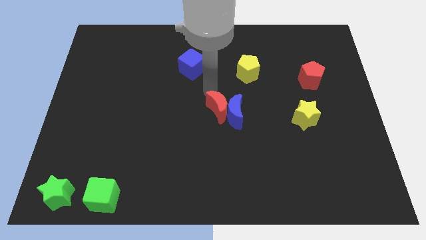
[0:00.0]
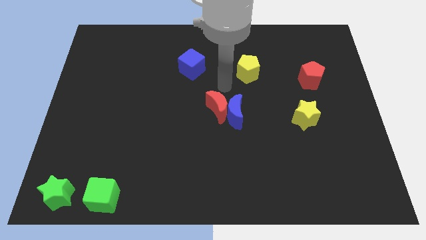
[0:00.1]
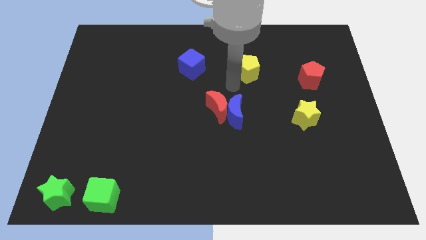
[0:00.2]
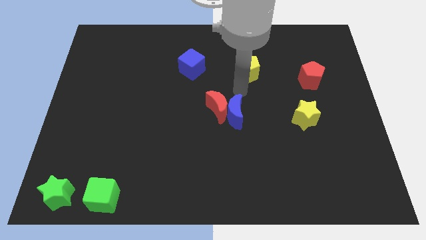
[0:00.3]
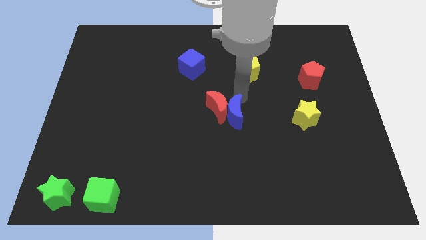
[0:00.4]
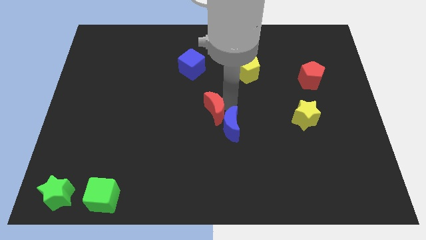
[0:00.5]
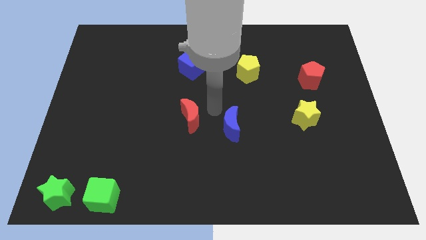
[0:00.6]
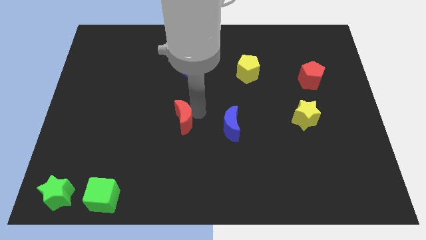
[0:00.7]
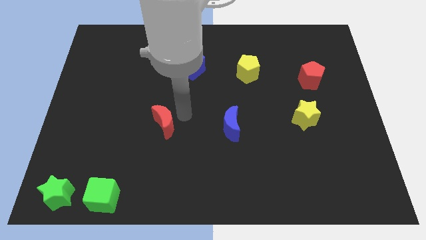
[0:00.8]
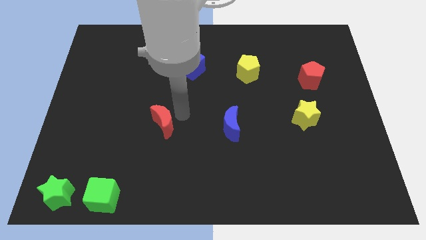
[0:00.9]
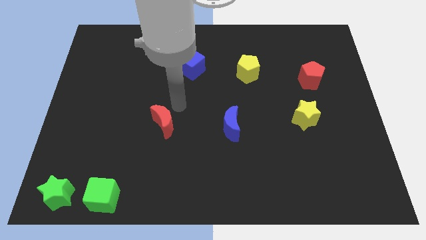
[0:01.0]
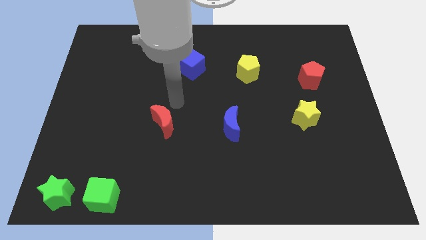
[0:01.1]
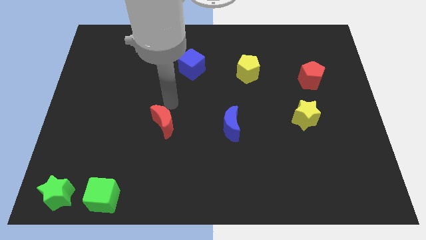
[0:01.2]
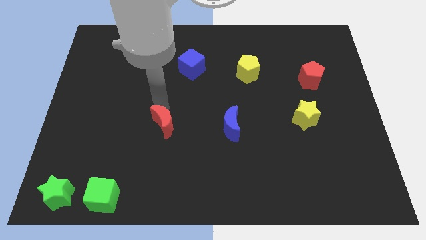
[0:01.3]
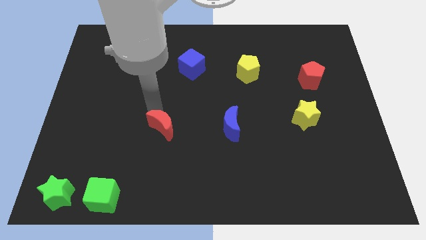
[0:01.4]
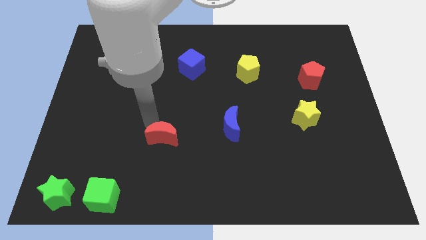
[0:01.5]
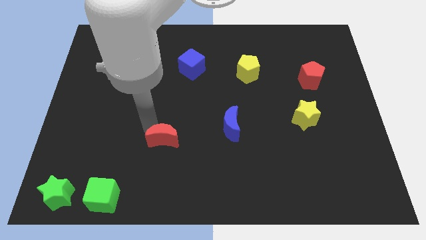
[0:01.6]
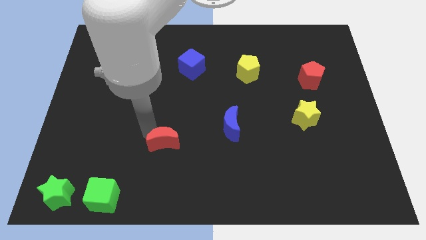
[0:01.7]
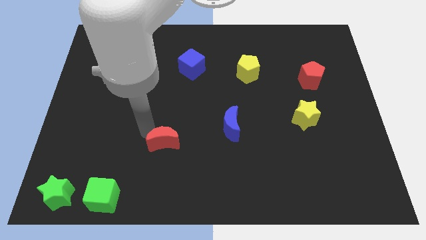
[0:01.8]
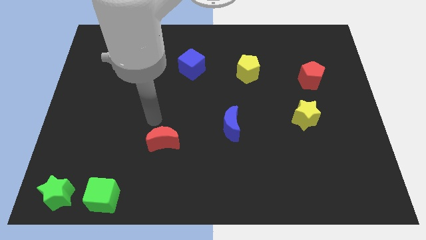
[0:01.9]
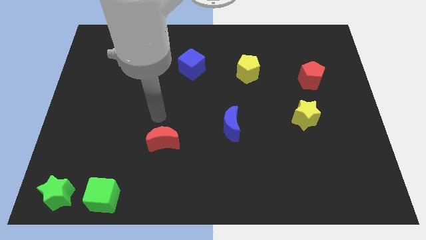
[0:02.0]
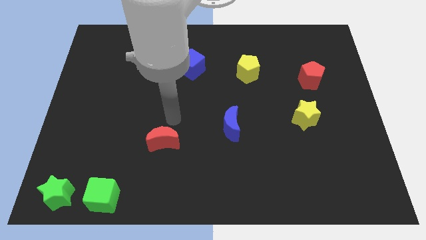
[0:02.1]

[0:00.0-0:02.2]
separate the red crescent from the blue crescent

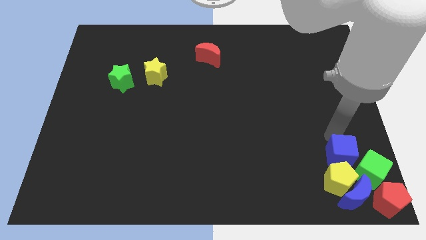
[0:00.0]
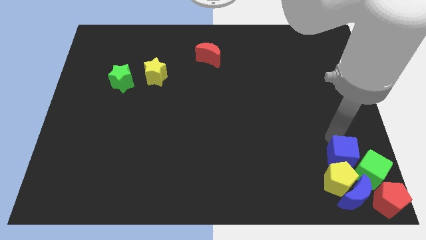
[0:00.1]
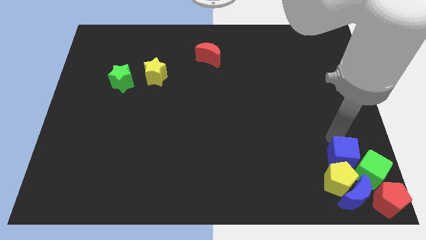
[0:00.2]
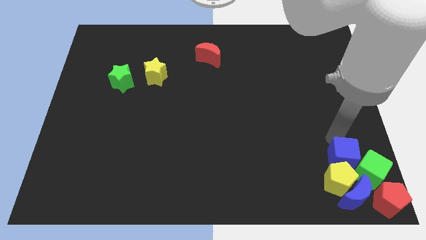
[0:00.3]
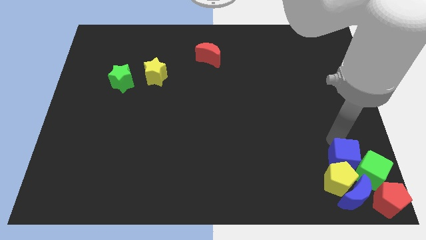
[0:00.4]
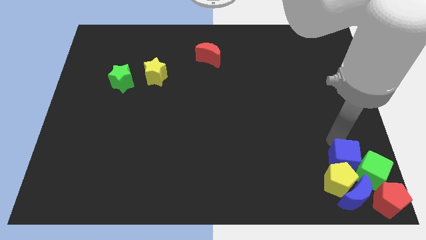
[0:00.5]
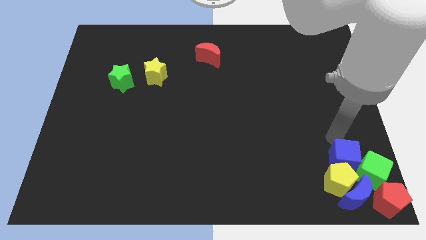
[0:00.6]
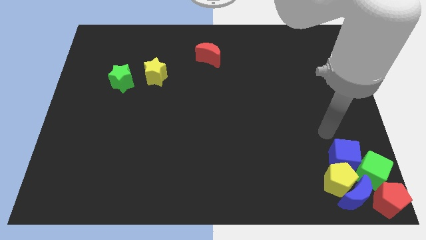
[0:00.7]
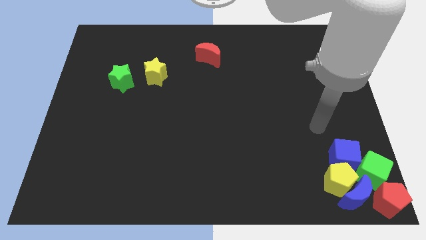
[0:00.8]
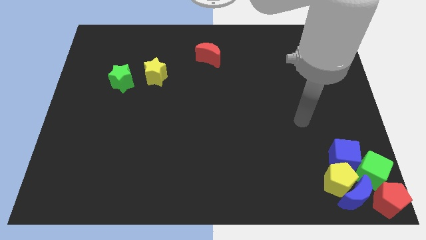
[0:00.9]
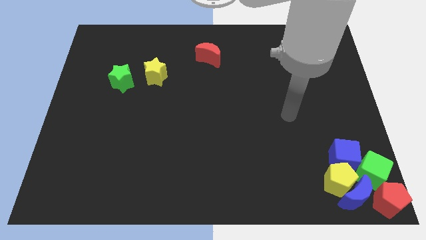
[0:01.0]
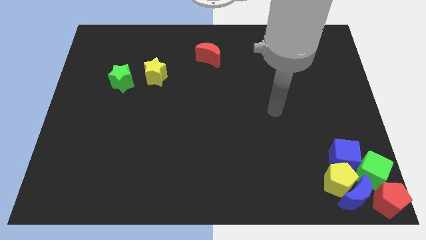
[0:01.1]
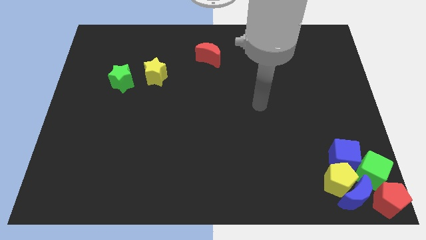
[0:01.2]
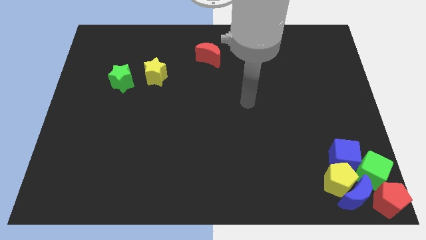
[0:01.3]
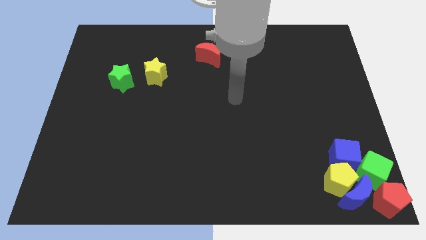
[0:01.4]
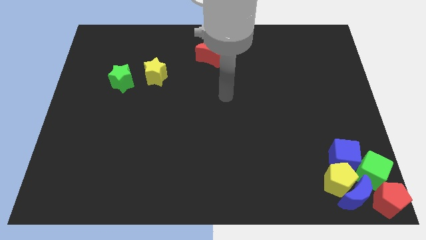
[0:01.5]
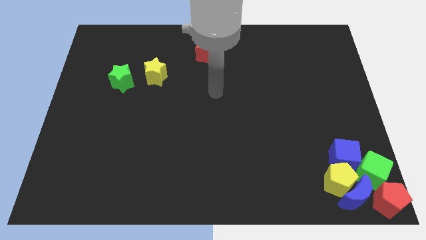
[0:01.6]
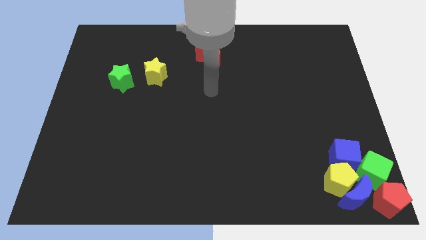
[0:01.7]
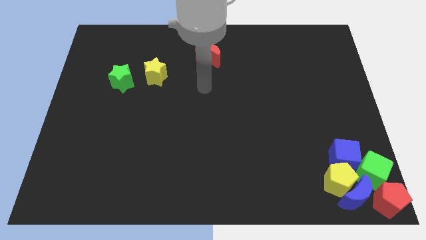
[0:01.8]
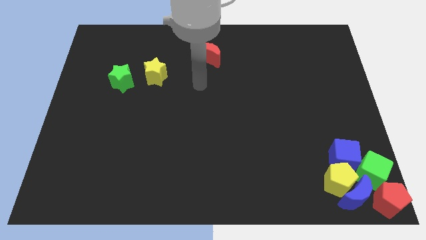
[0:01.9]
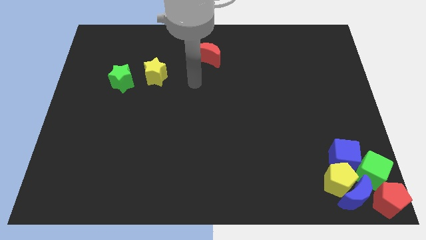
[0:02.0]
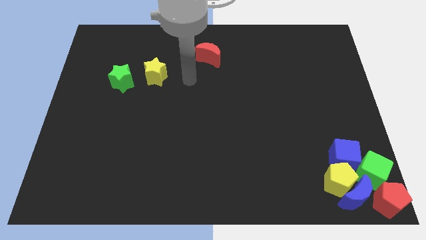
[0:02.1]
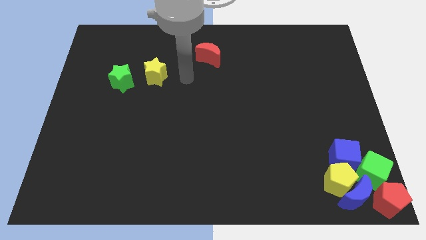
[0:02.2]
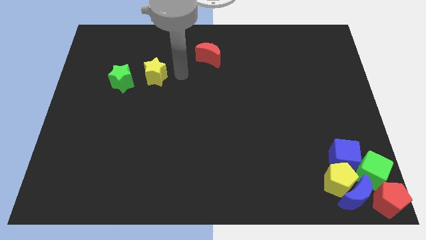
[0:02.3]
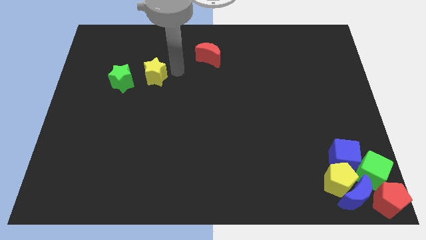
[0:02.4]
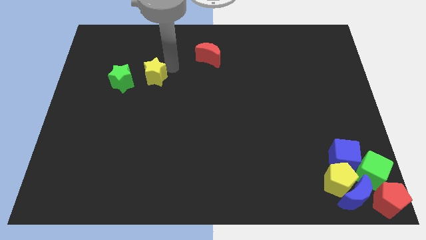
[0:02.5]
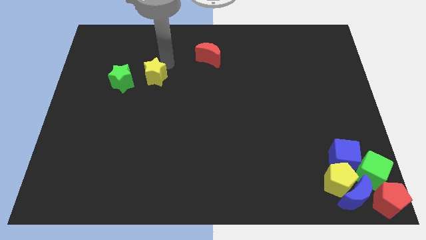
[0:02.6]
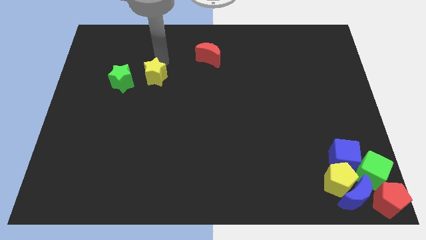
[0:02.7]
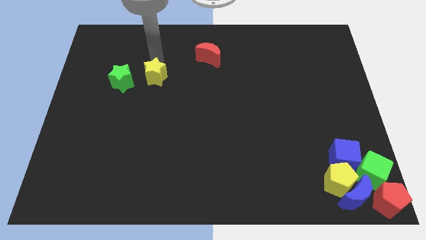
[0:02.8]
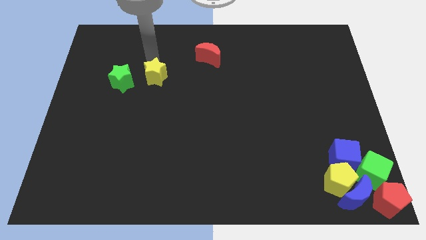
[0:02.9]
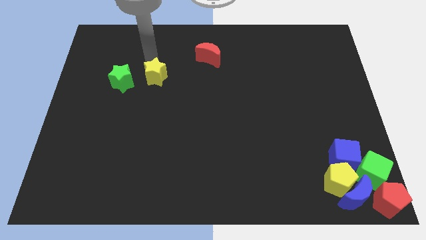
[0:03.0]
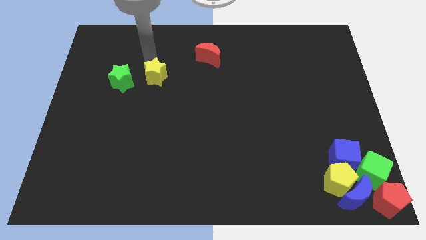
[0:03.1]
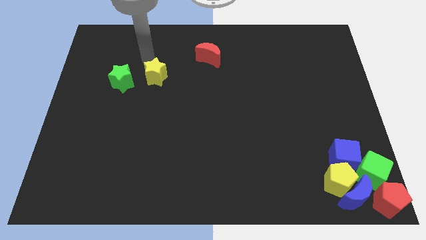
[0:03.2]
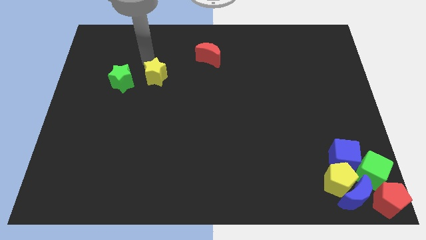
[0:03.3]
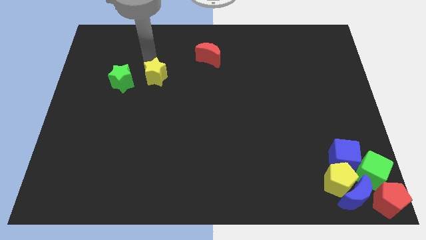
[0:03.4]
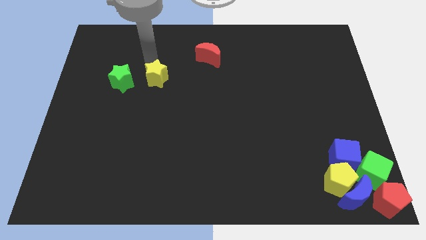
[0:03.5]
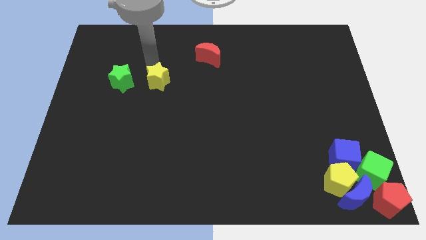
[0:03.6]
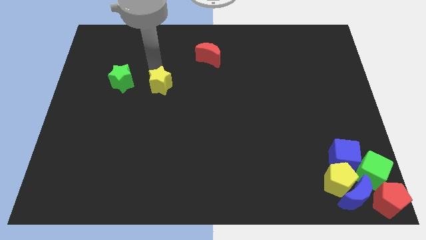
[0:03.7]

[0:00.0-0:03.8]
move the arm towards the top left to the yellow star

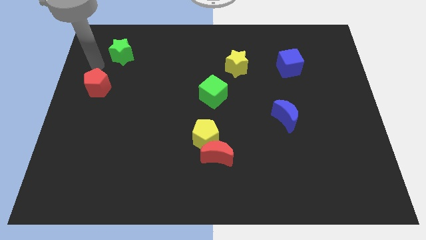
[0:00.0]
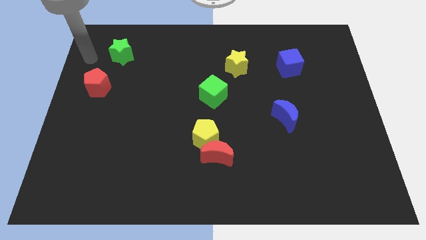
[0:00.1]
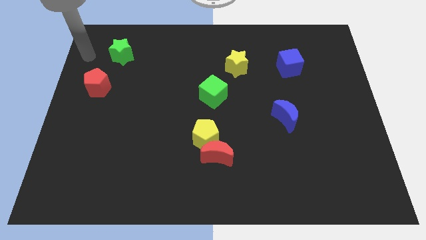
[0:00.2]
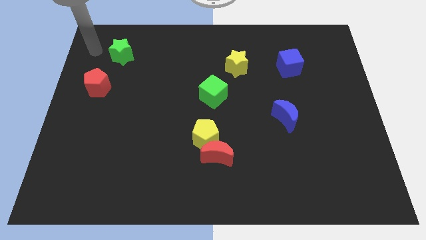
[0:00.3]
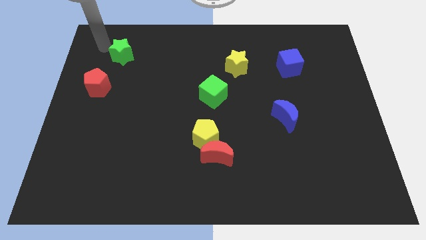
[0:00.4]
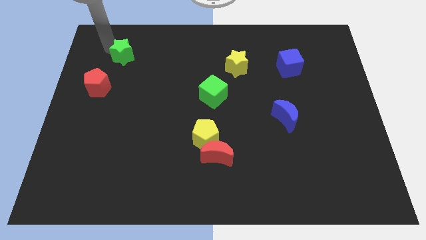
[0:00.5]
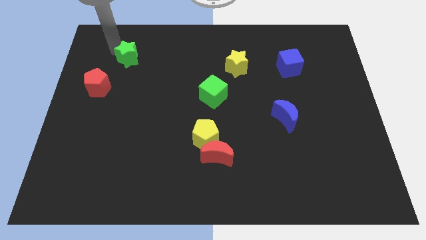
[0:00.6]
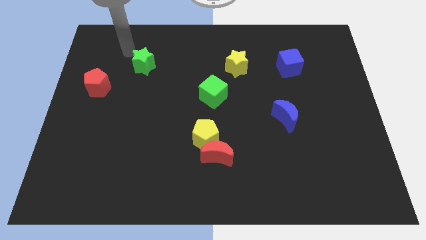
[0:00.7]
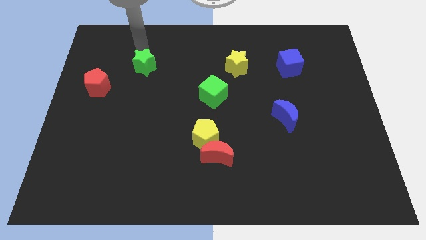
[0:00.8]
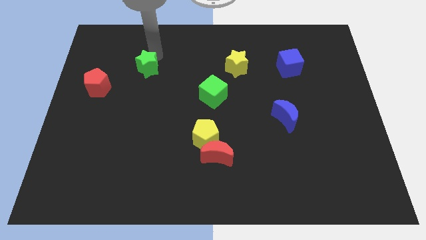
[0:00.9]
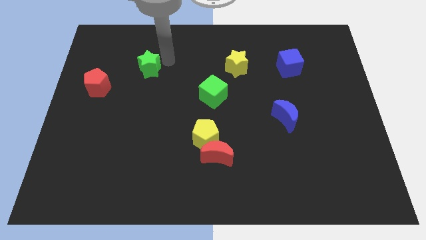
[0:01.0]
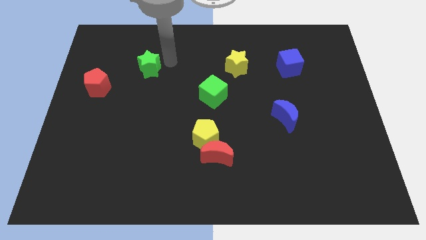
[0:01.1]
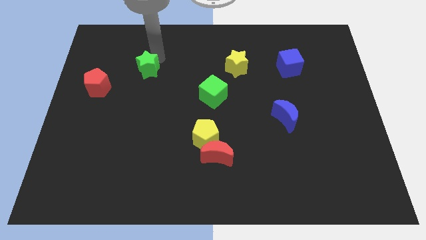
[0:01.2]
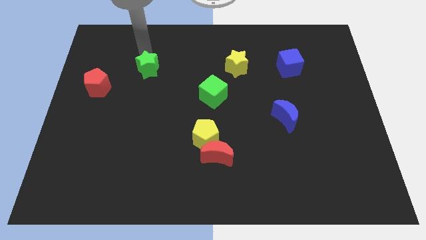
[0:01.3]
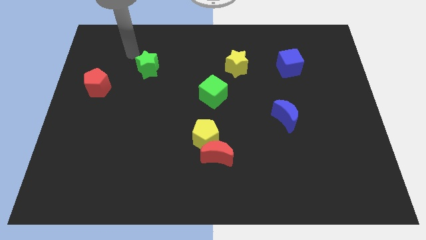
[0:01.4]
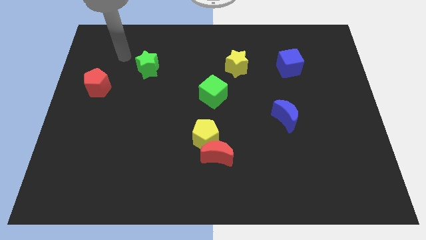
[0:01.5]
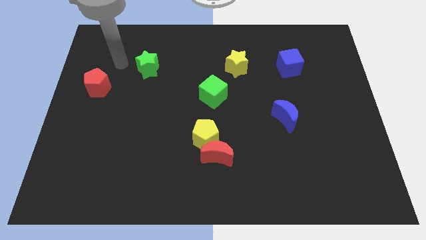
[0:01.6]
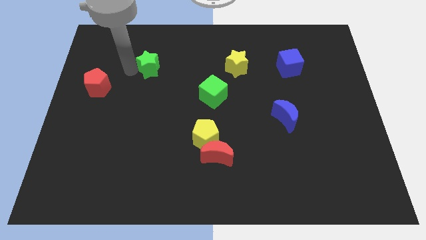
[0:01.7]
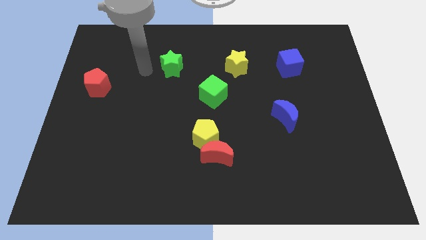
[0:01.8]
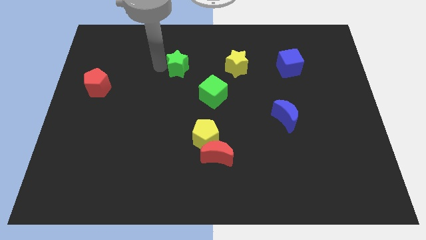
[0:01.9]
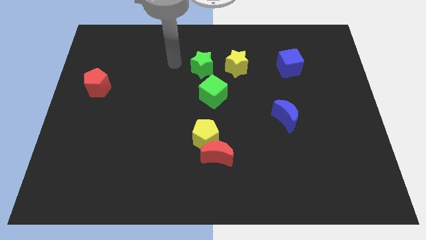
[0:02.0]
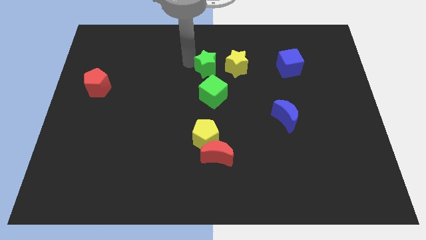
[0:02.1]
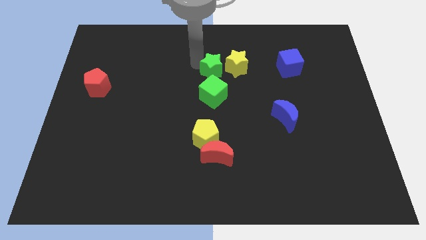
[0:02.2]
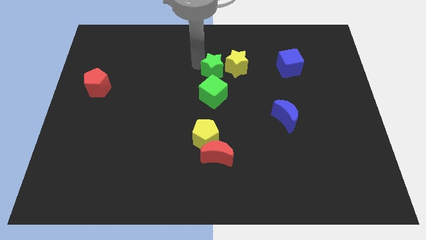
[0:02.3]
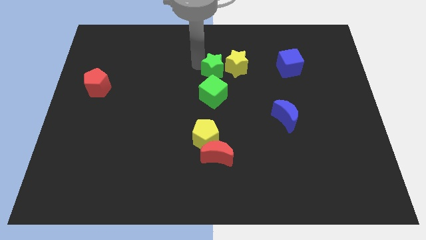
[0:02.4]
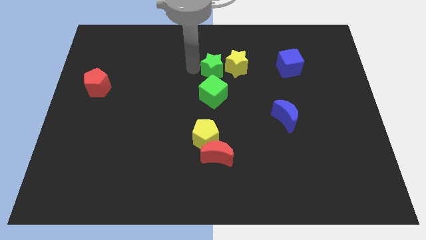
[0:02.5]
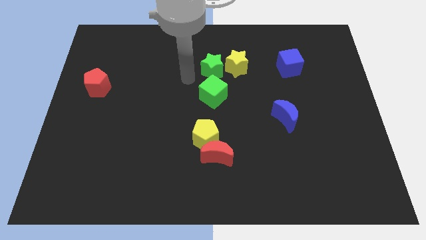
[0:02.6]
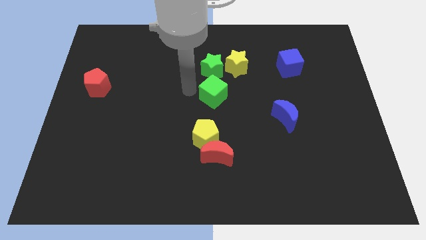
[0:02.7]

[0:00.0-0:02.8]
place the green star at the top of green cube
